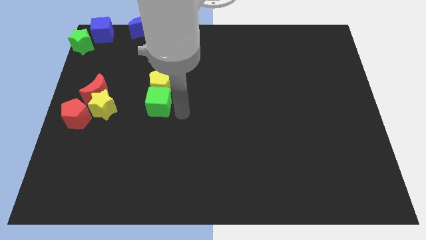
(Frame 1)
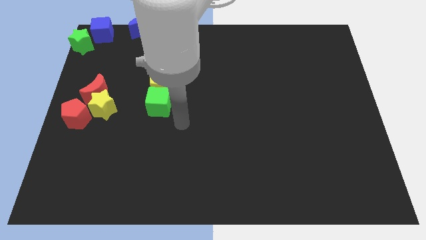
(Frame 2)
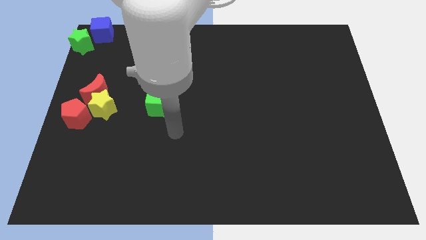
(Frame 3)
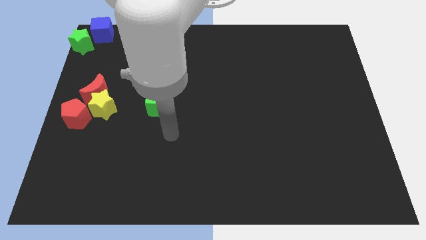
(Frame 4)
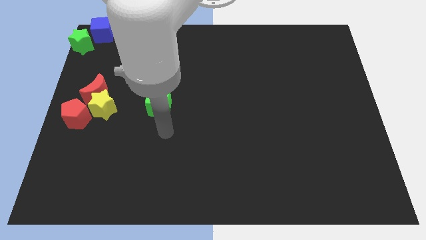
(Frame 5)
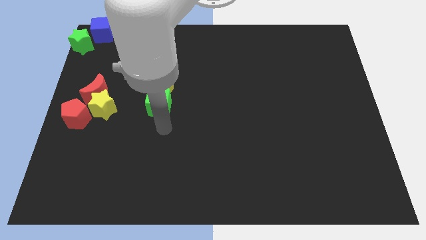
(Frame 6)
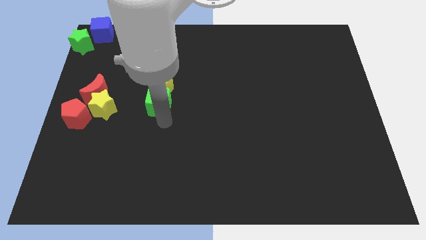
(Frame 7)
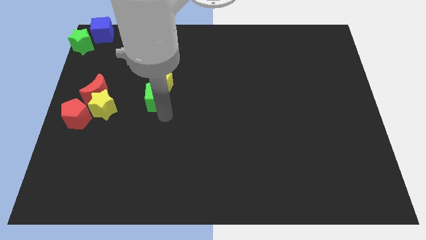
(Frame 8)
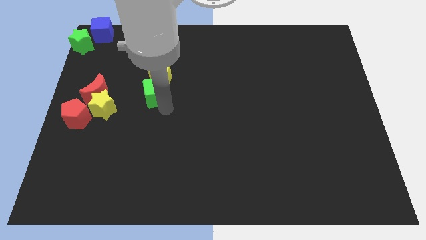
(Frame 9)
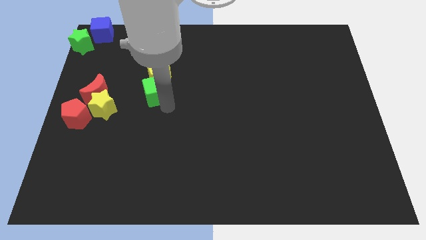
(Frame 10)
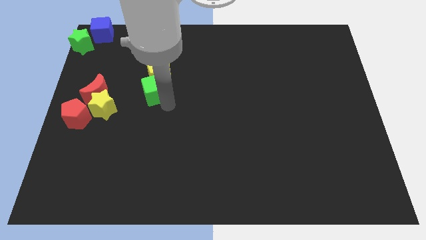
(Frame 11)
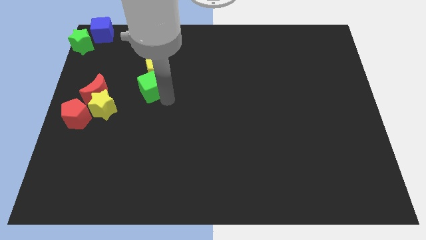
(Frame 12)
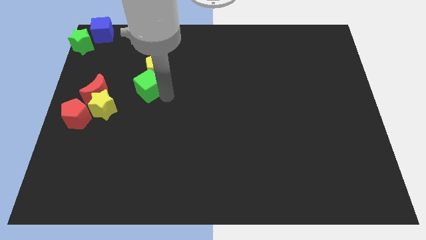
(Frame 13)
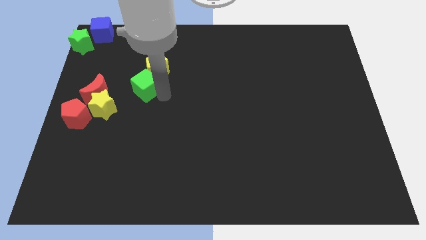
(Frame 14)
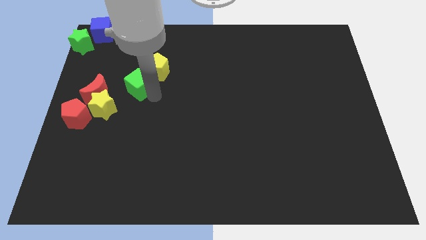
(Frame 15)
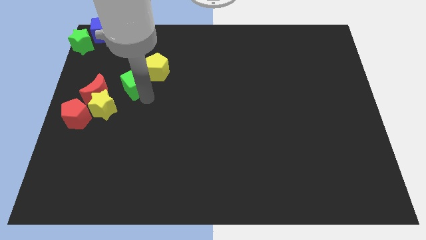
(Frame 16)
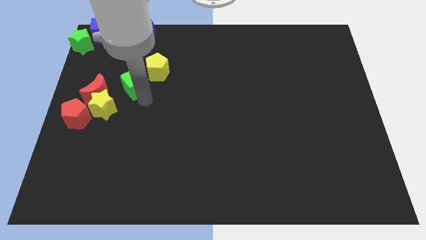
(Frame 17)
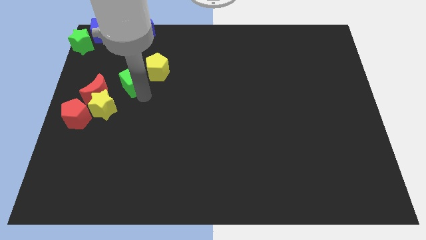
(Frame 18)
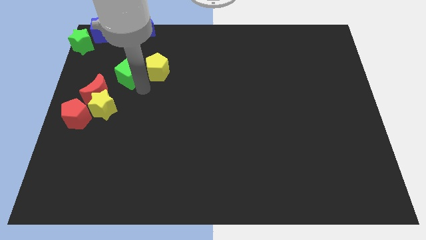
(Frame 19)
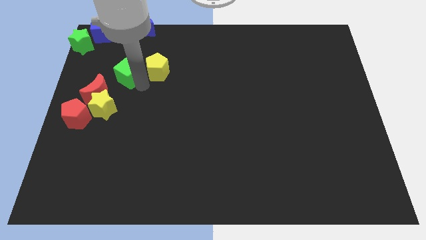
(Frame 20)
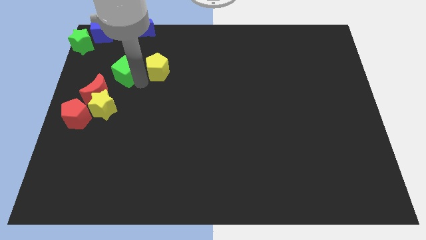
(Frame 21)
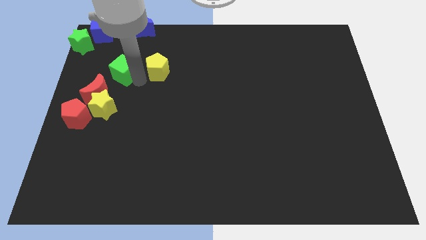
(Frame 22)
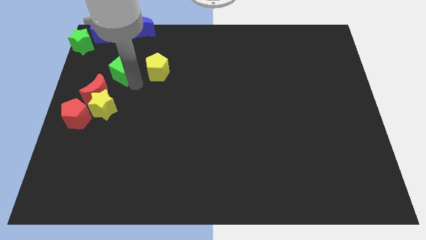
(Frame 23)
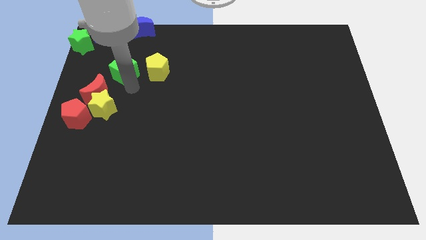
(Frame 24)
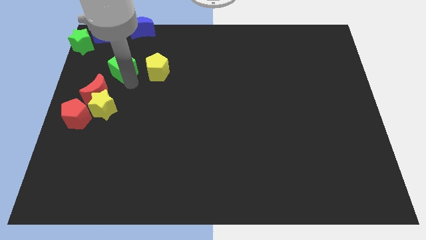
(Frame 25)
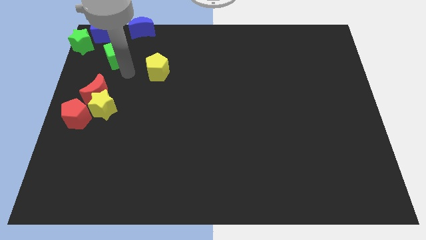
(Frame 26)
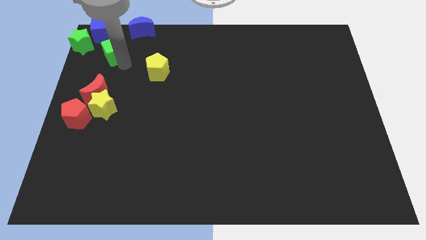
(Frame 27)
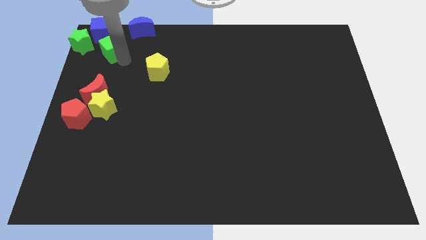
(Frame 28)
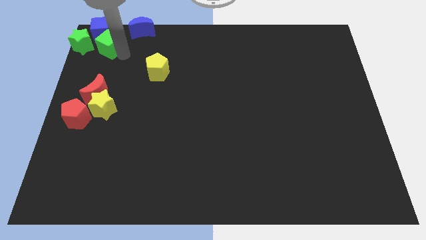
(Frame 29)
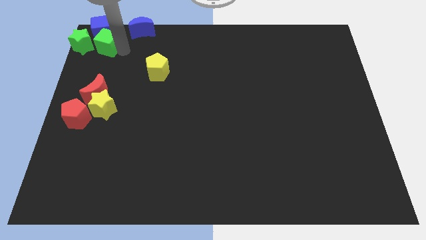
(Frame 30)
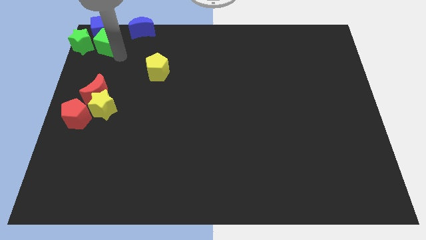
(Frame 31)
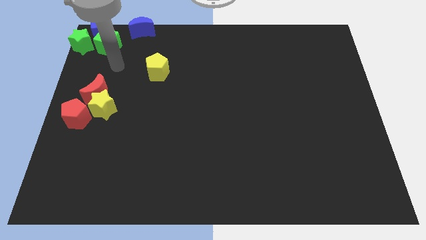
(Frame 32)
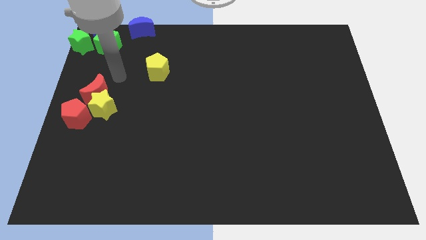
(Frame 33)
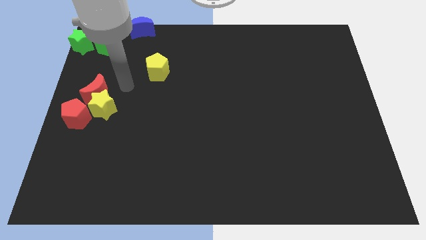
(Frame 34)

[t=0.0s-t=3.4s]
move the green cube to the right of the green star

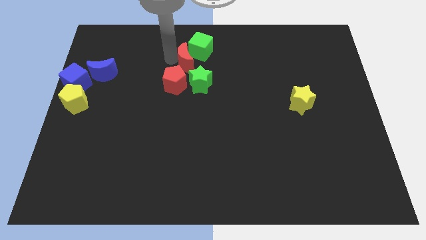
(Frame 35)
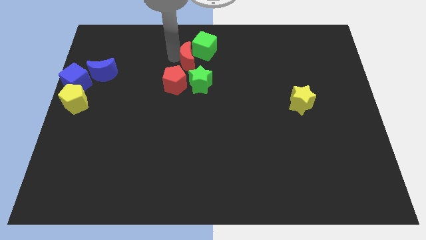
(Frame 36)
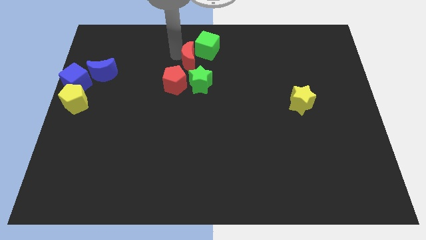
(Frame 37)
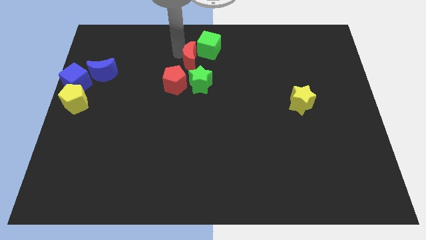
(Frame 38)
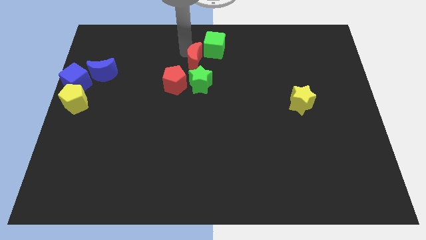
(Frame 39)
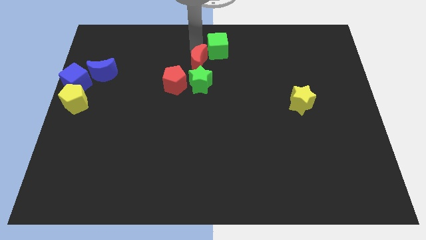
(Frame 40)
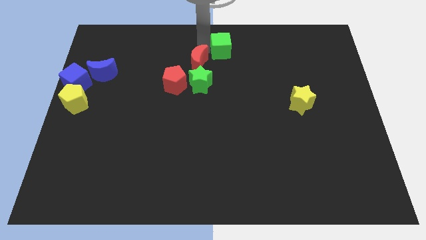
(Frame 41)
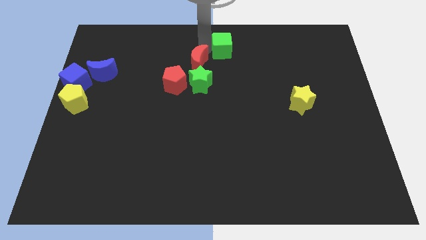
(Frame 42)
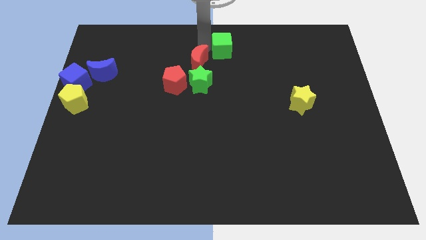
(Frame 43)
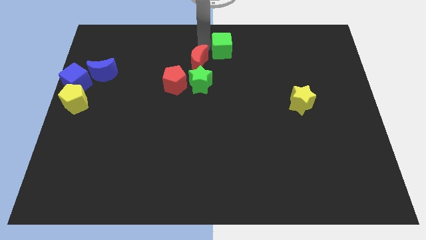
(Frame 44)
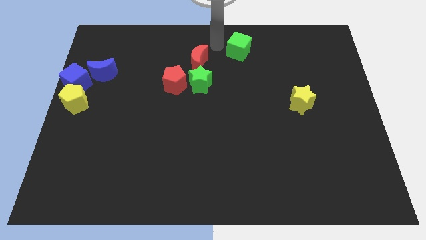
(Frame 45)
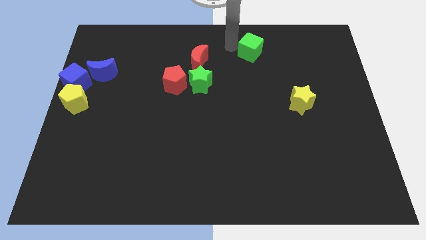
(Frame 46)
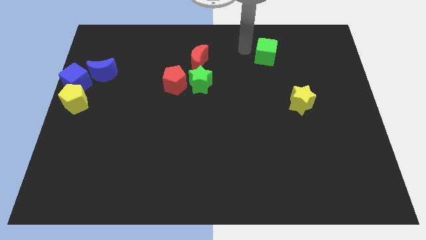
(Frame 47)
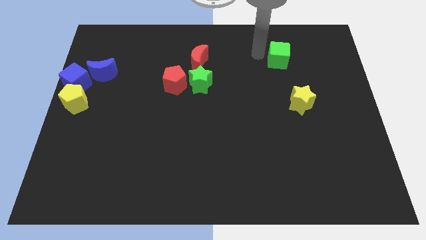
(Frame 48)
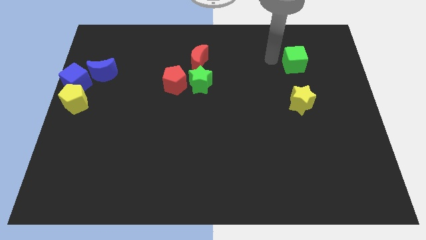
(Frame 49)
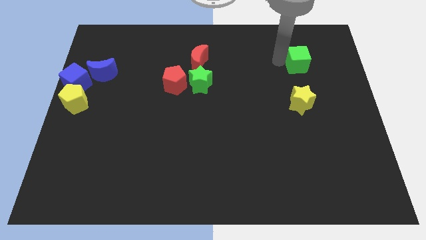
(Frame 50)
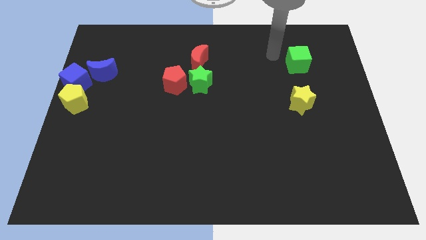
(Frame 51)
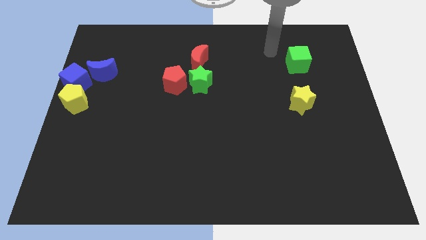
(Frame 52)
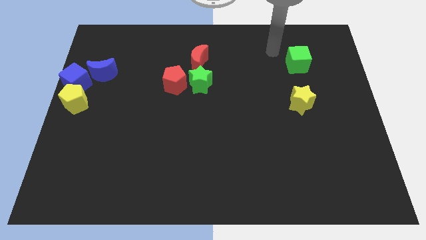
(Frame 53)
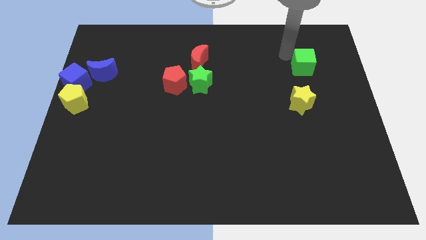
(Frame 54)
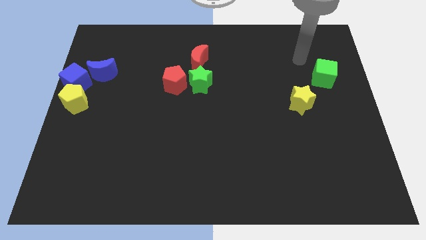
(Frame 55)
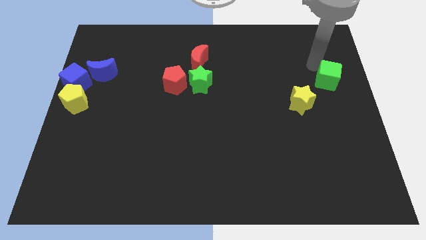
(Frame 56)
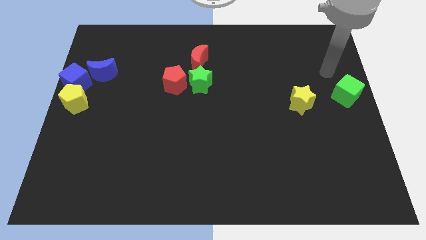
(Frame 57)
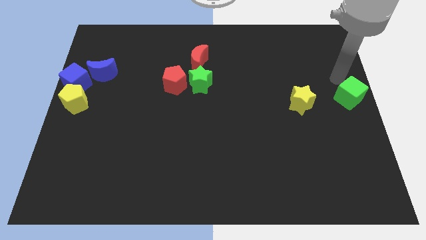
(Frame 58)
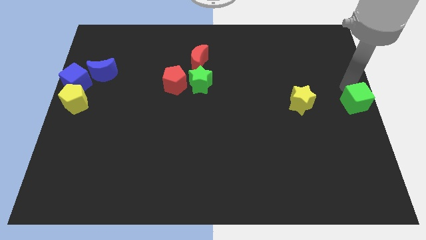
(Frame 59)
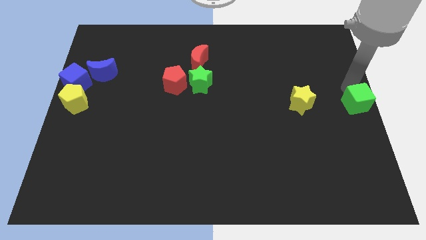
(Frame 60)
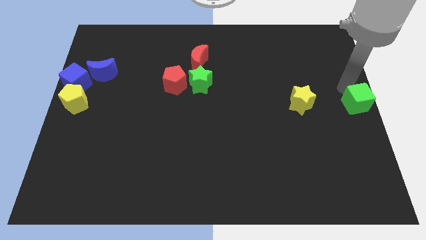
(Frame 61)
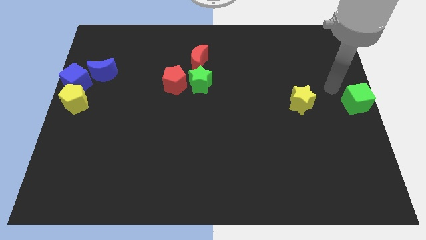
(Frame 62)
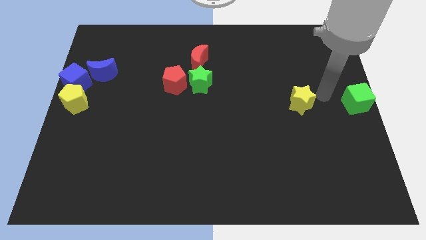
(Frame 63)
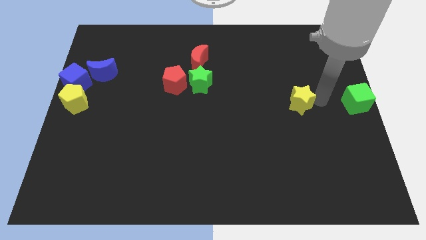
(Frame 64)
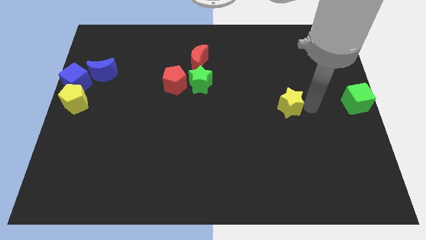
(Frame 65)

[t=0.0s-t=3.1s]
place the green cube at the center right side of the board

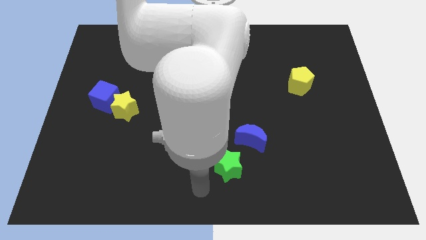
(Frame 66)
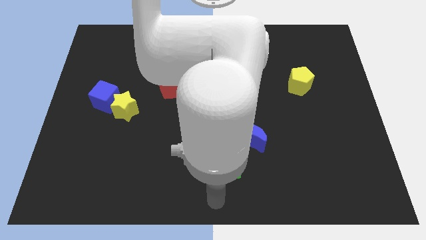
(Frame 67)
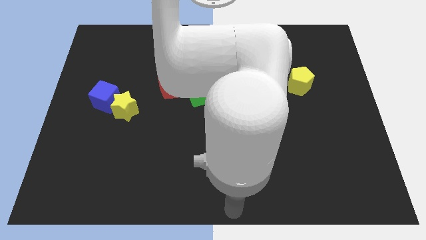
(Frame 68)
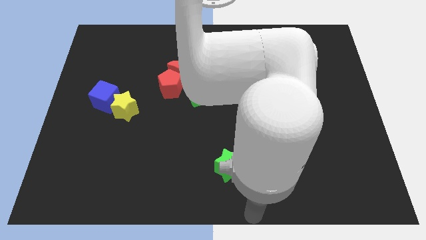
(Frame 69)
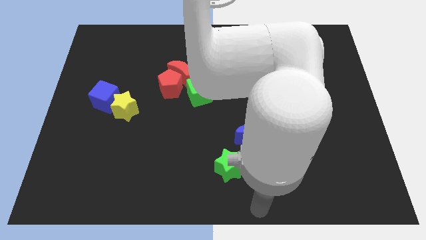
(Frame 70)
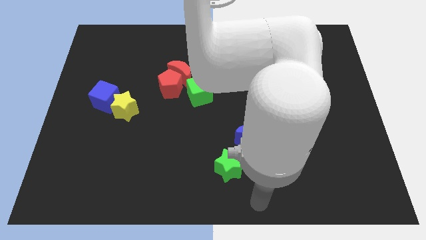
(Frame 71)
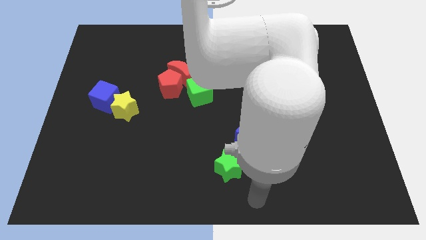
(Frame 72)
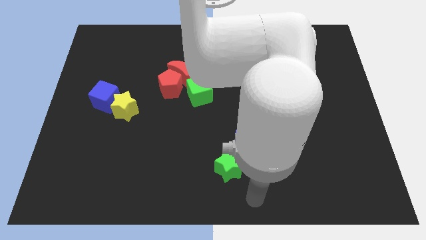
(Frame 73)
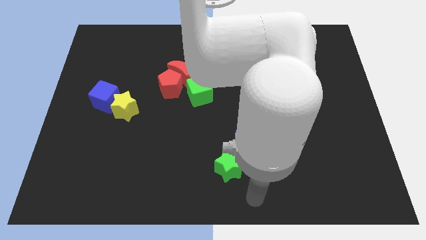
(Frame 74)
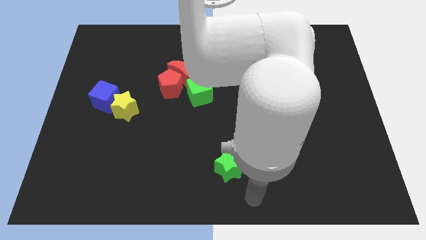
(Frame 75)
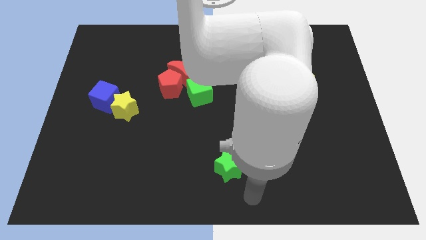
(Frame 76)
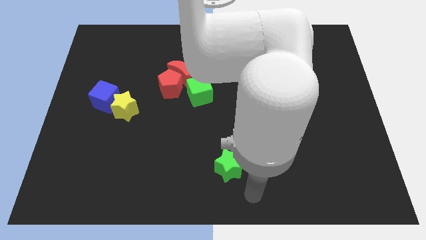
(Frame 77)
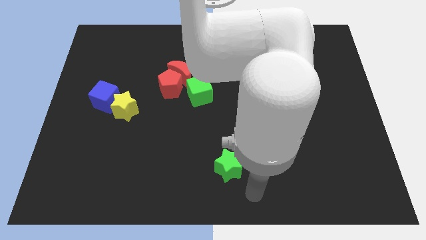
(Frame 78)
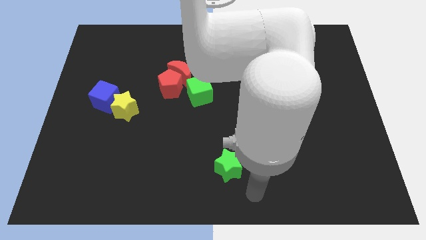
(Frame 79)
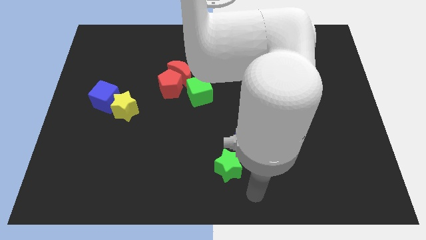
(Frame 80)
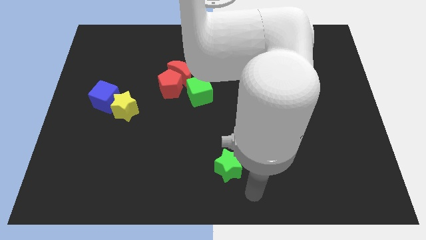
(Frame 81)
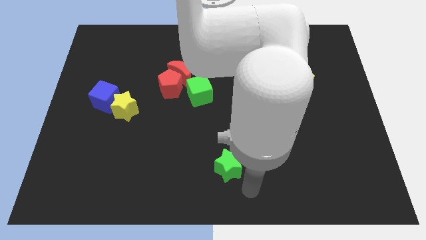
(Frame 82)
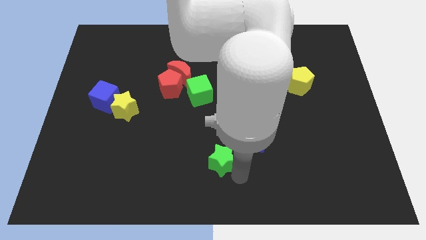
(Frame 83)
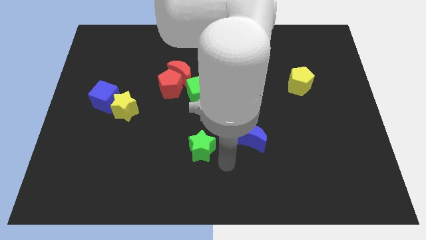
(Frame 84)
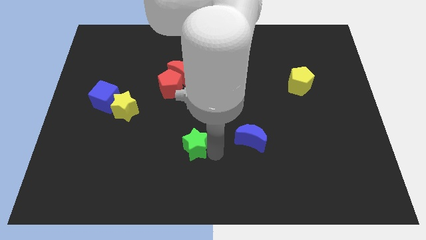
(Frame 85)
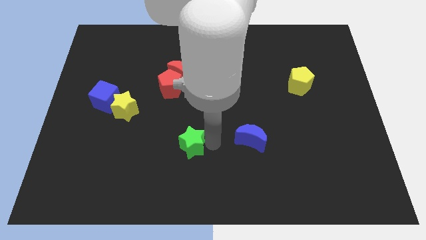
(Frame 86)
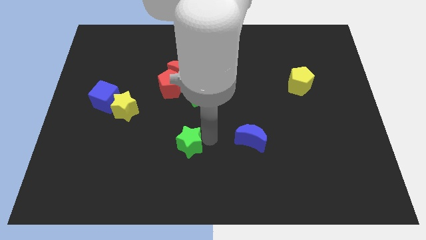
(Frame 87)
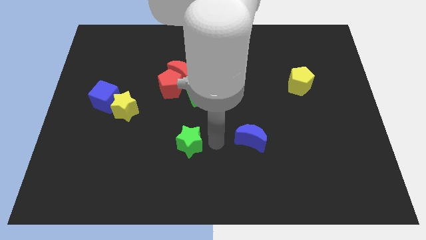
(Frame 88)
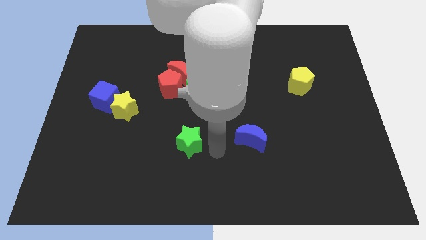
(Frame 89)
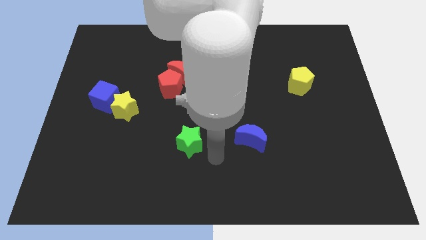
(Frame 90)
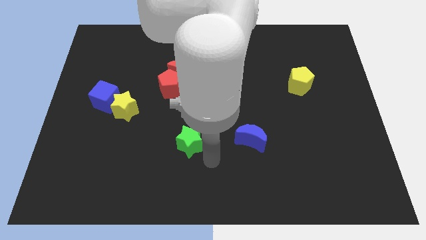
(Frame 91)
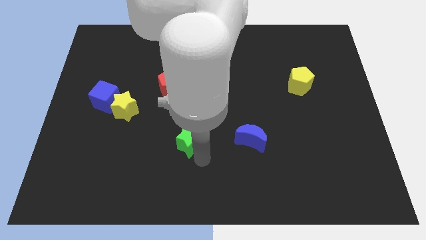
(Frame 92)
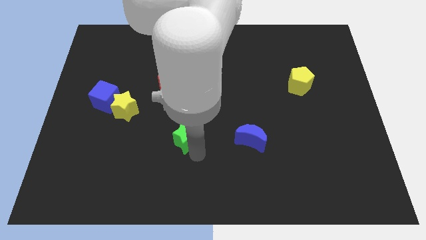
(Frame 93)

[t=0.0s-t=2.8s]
place the green star to the left of the blue crescent
